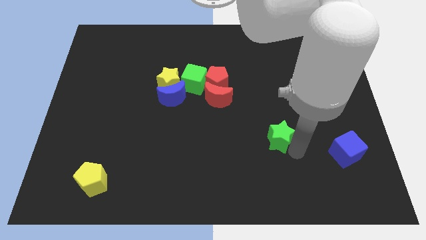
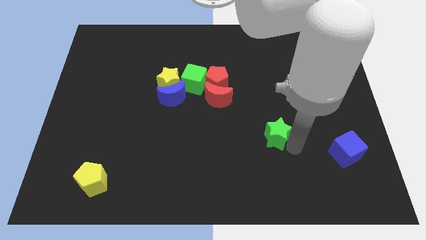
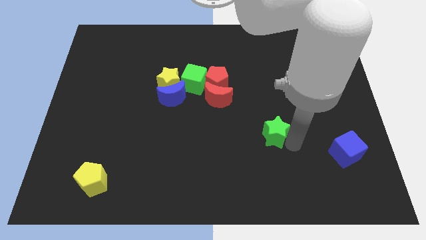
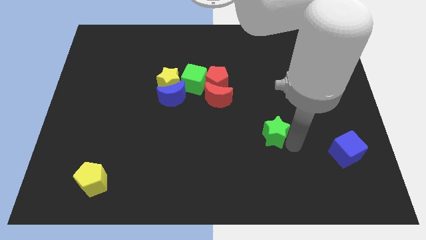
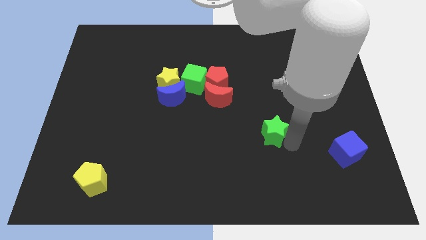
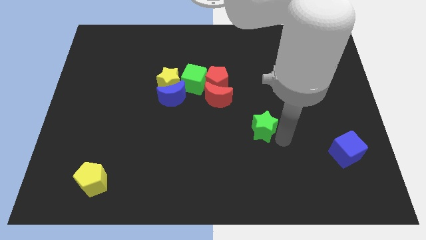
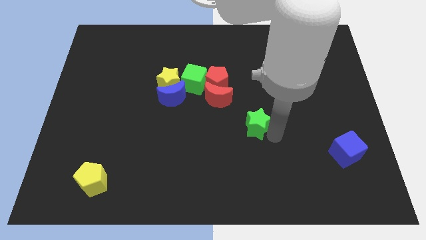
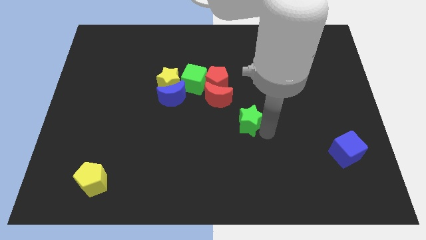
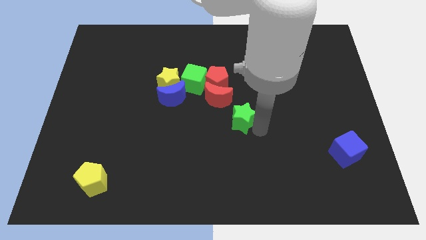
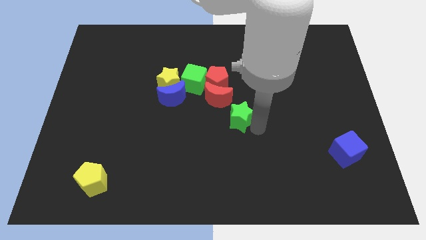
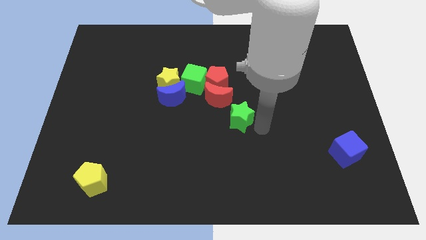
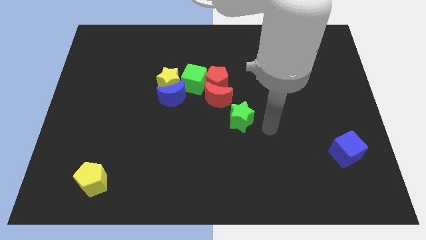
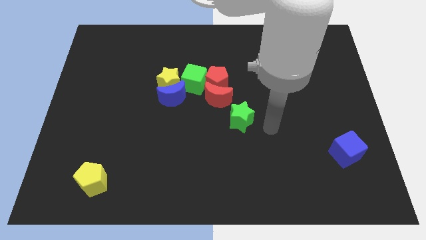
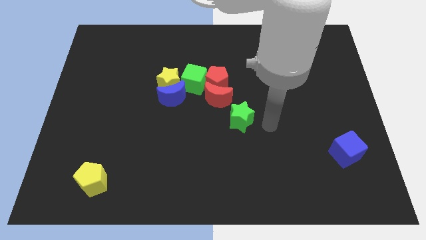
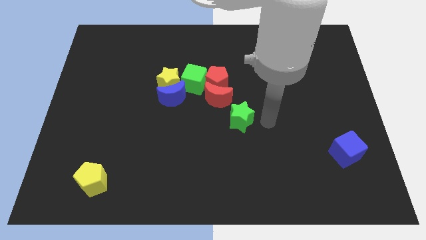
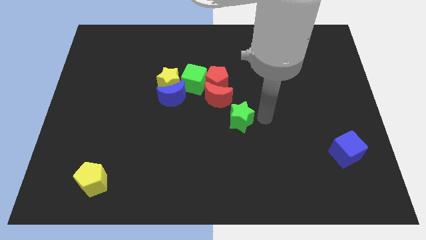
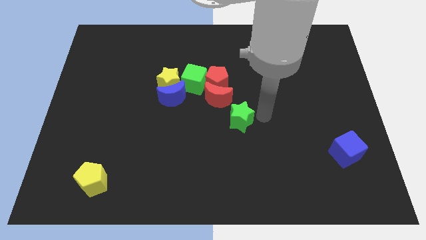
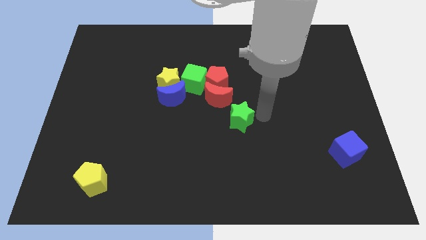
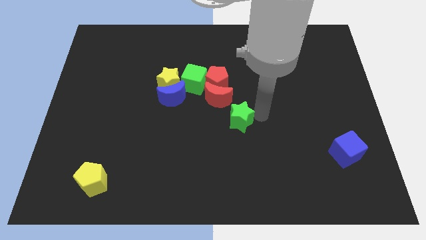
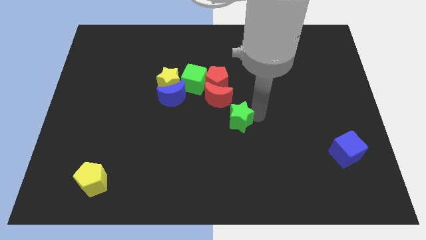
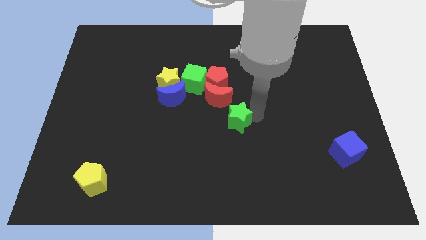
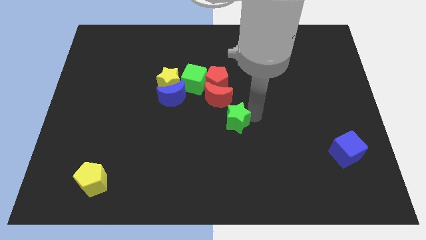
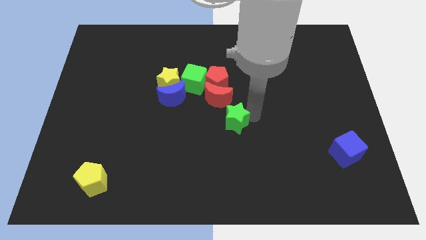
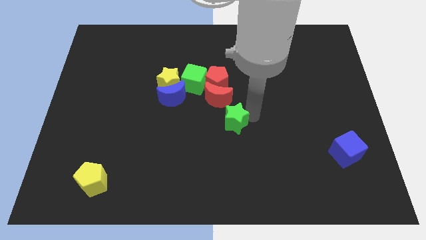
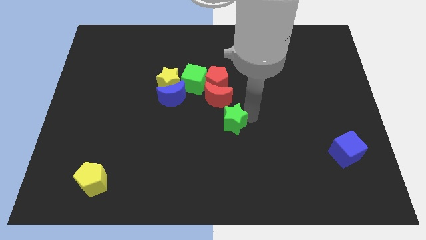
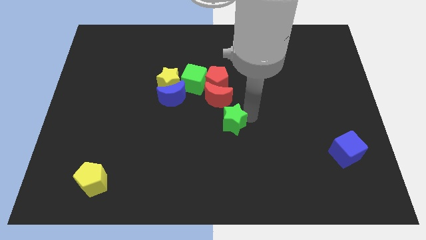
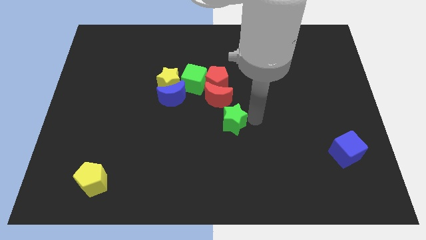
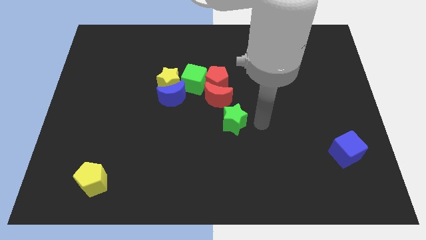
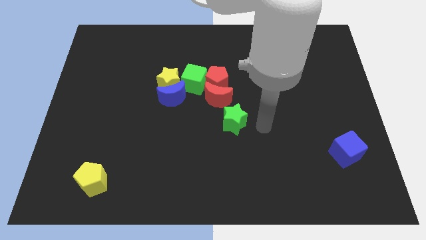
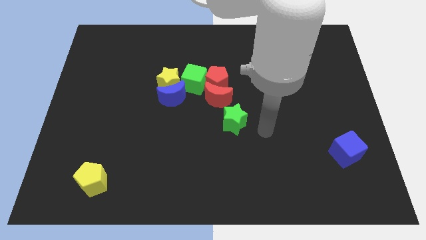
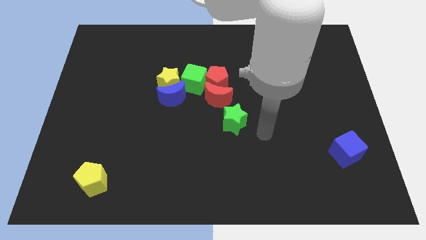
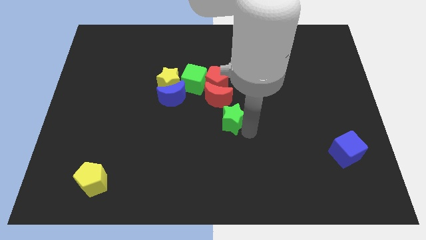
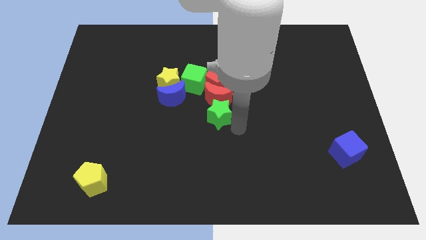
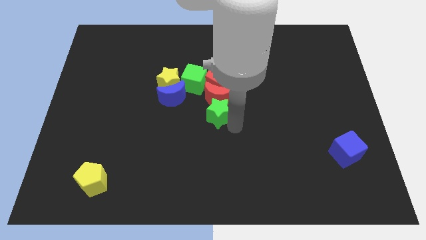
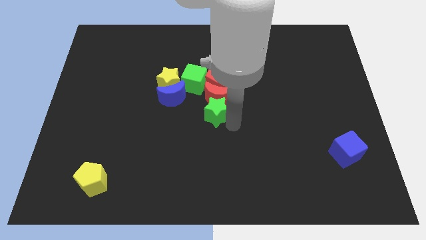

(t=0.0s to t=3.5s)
place the green star below the red moon

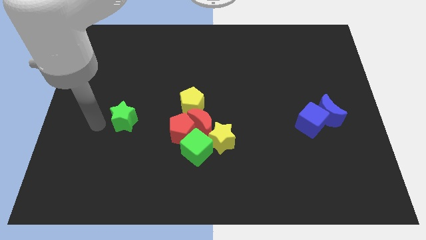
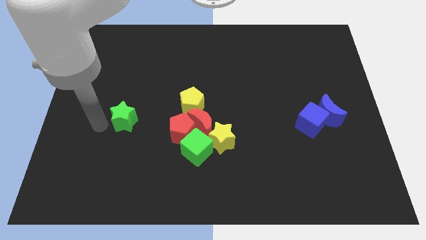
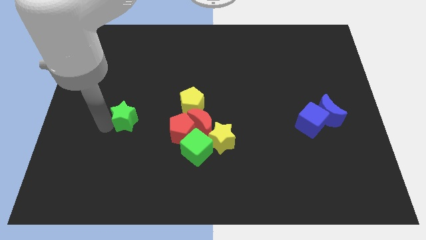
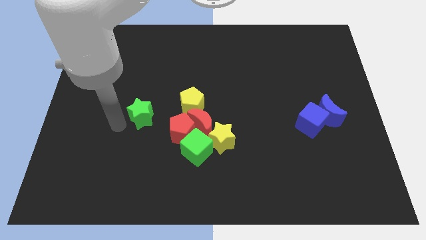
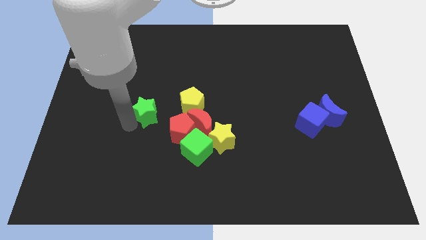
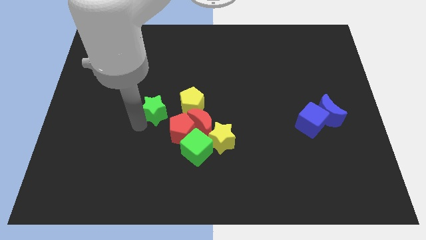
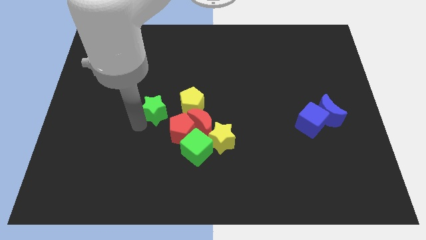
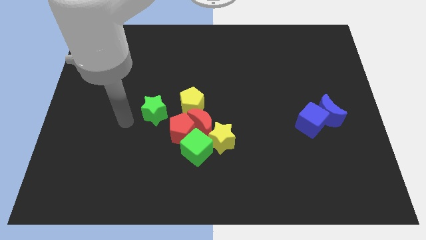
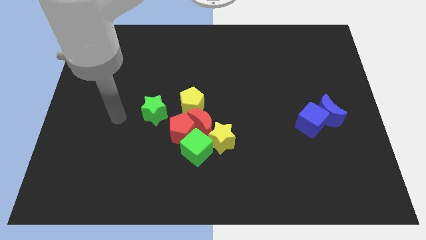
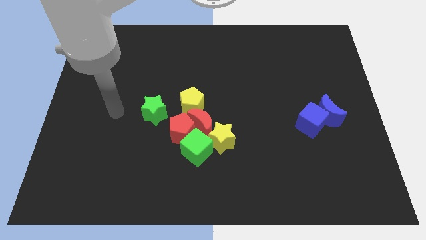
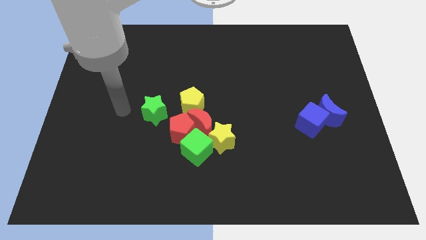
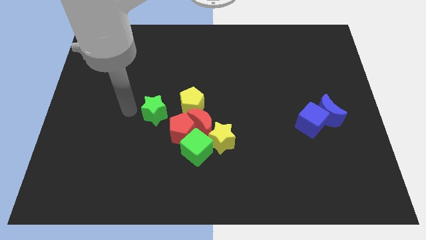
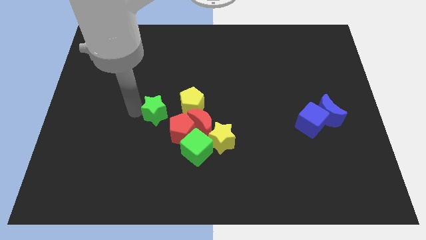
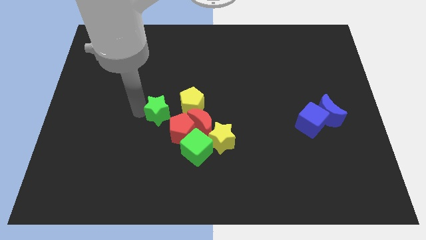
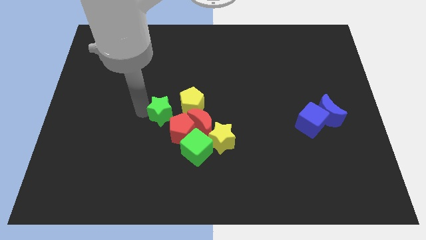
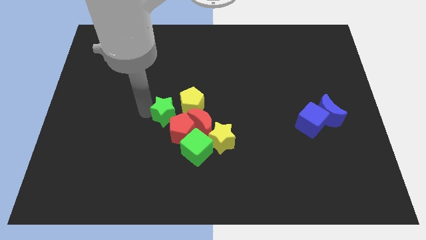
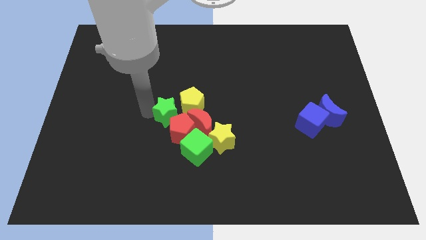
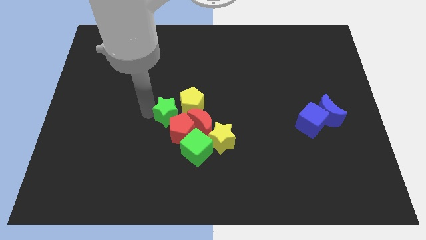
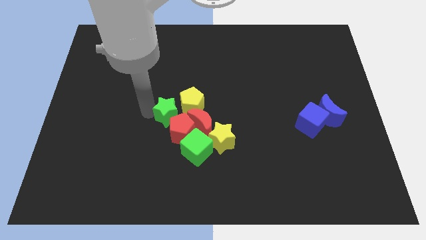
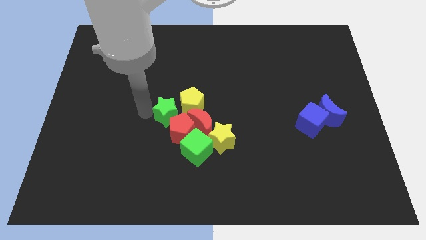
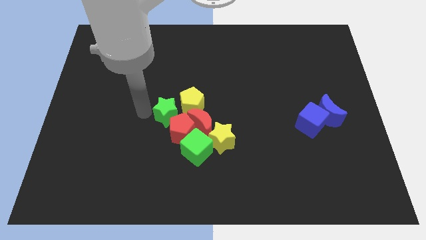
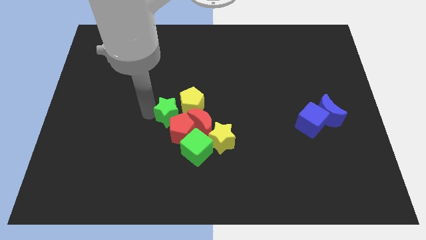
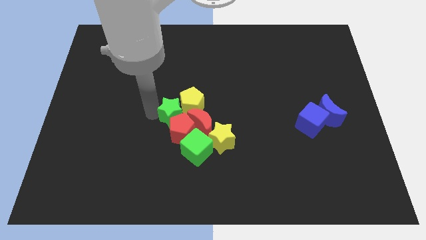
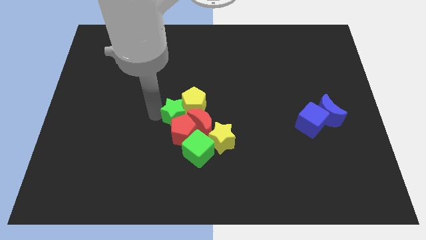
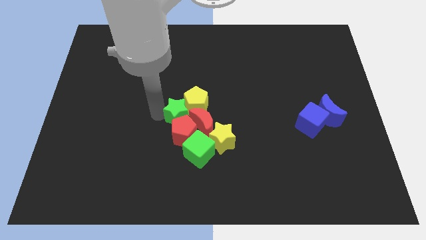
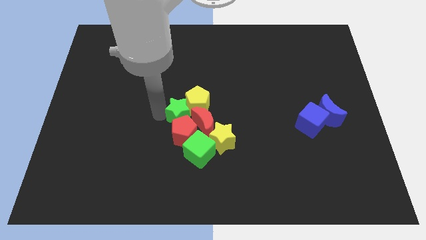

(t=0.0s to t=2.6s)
make a group of all the blocks except blue blocks

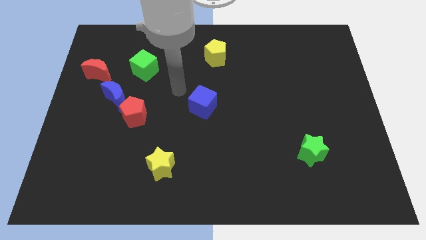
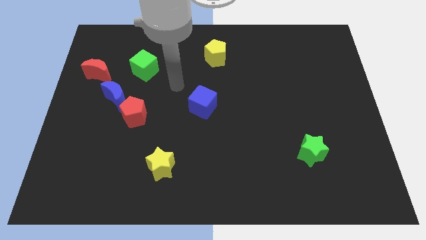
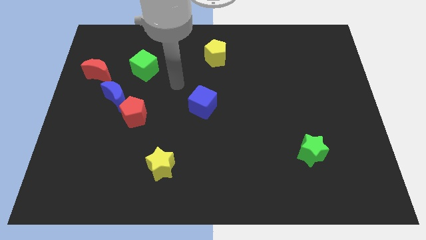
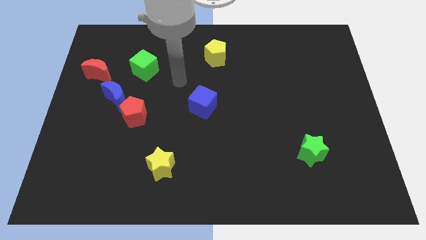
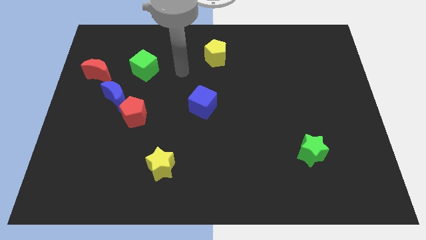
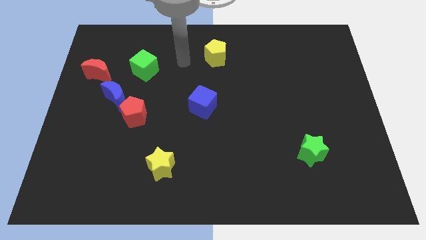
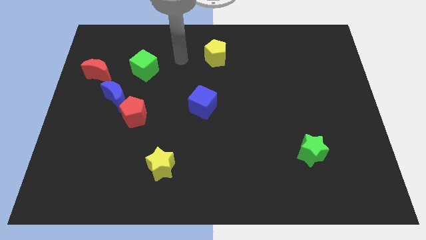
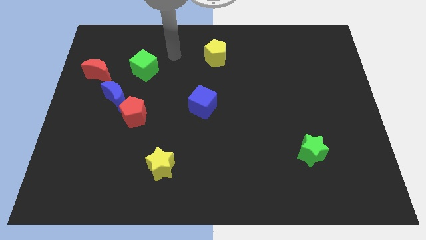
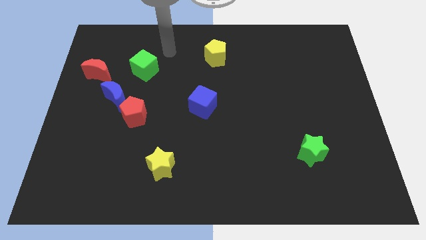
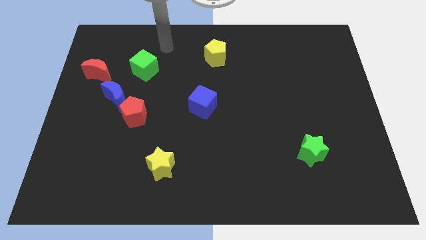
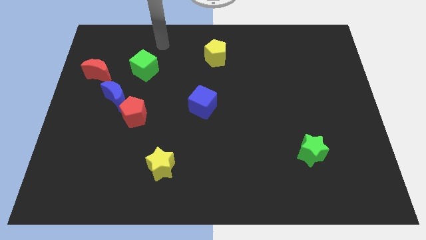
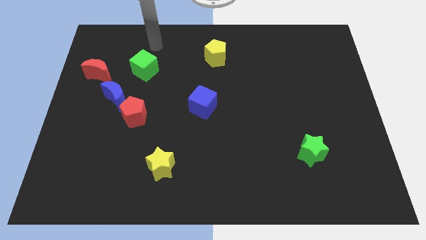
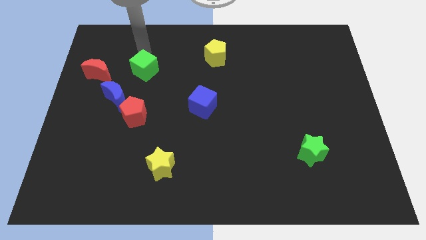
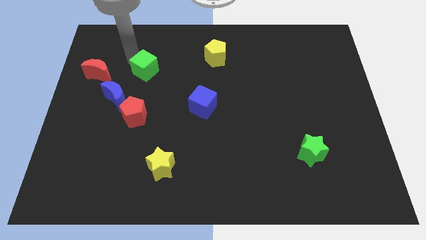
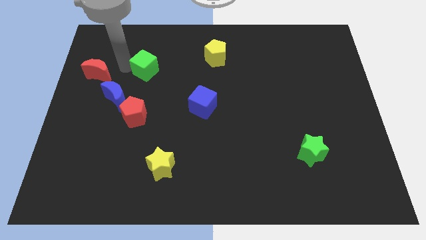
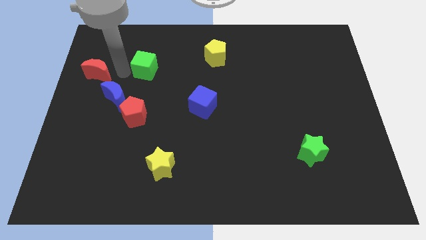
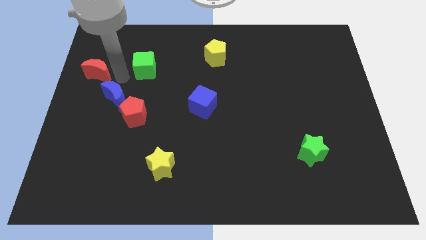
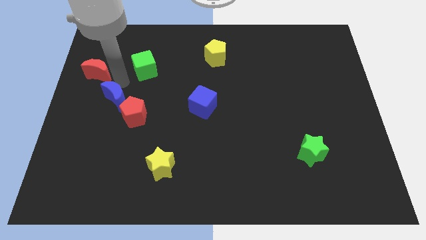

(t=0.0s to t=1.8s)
place the arm towards the left side of the green cube

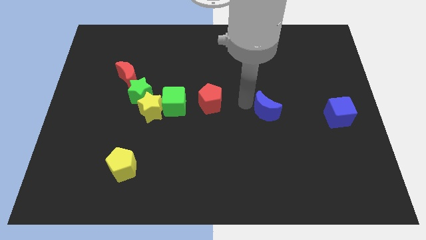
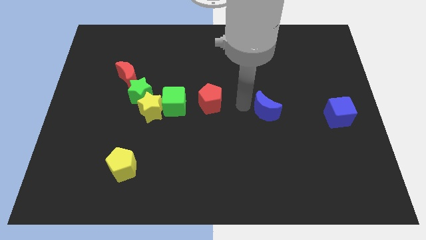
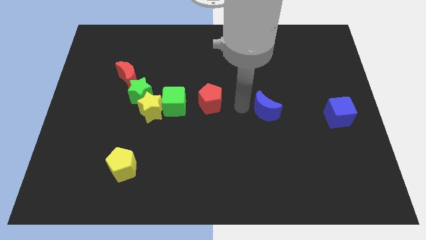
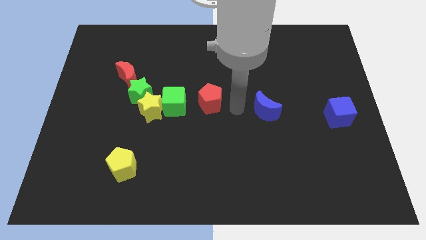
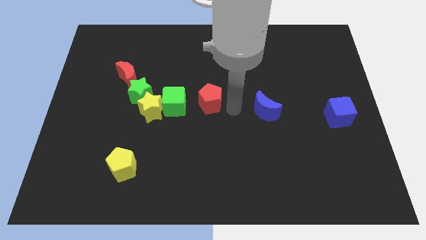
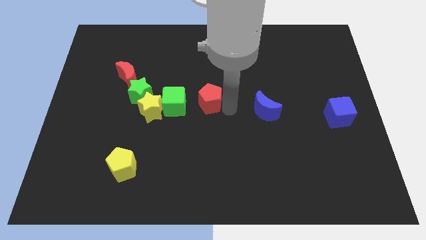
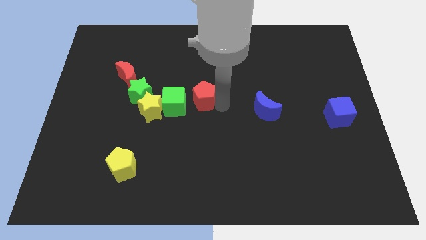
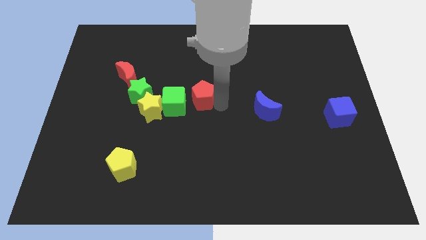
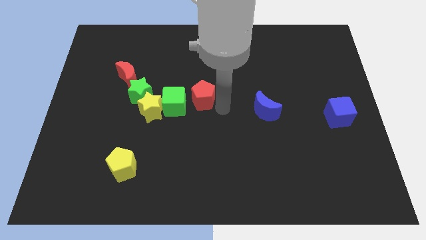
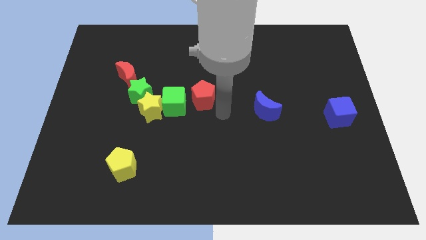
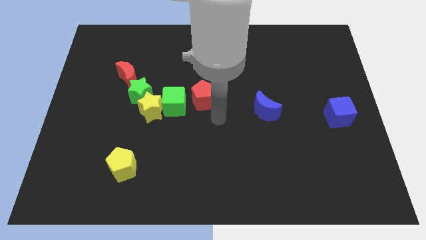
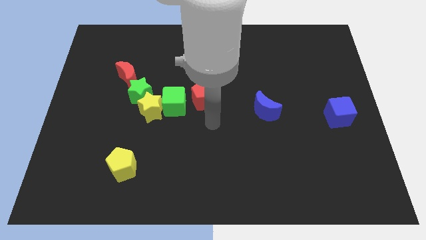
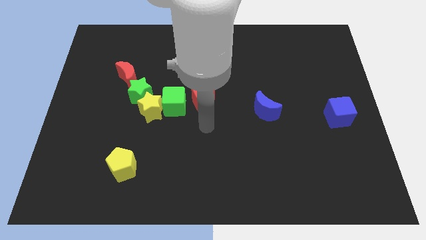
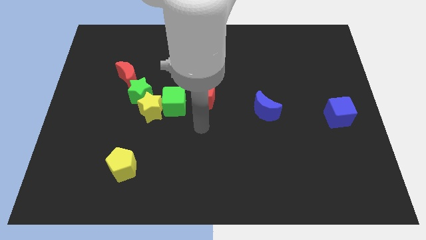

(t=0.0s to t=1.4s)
place the red pentagon to the right side of the green cube
